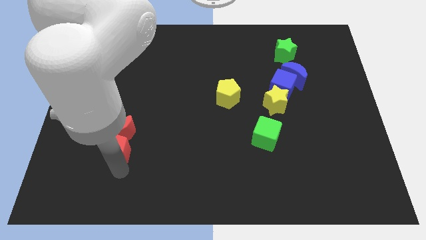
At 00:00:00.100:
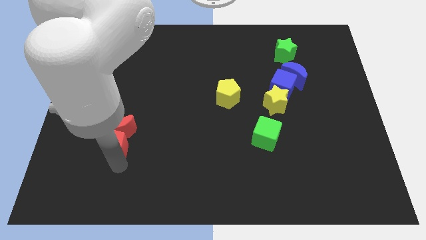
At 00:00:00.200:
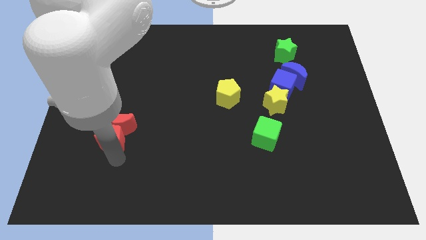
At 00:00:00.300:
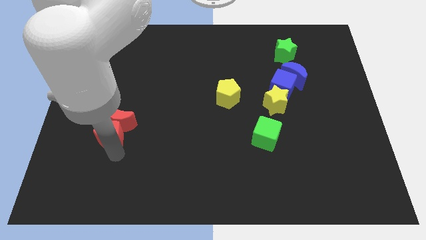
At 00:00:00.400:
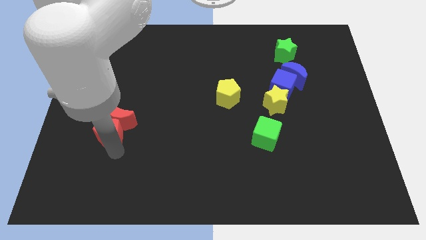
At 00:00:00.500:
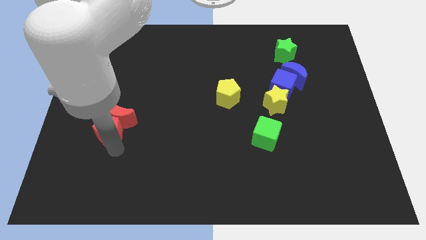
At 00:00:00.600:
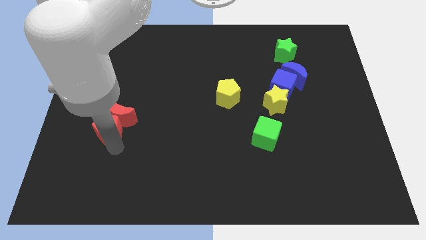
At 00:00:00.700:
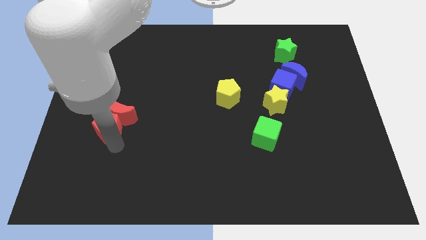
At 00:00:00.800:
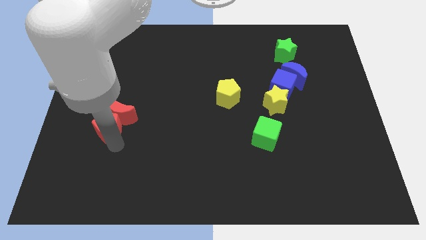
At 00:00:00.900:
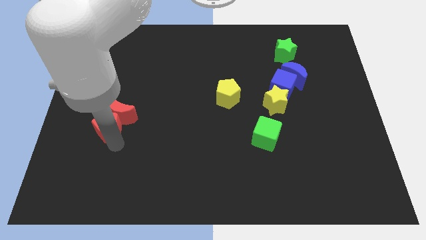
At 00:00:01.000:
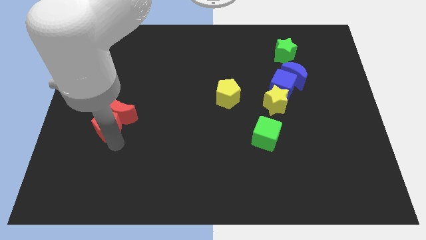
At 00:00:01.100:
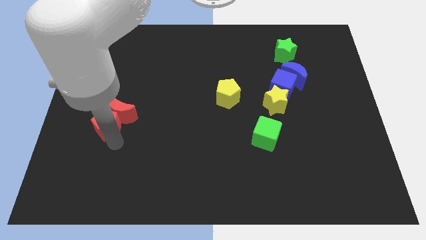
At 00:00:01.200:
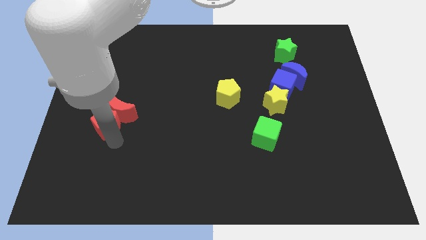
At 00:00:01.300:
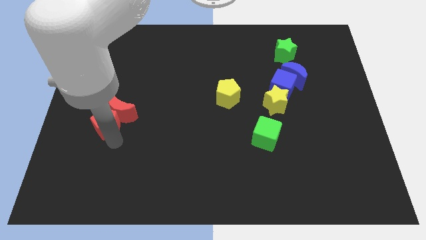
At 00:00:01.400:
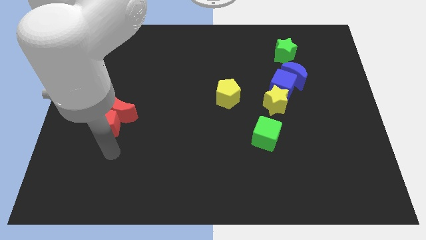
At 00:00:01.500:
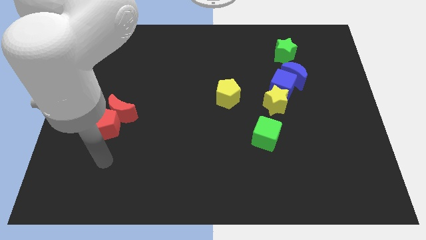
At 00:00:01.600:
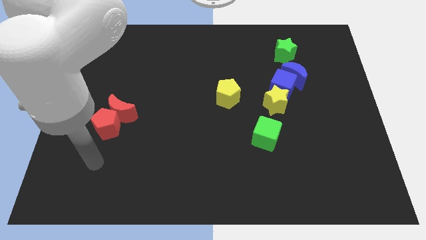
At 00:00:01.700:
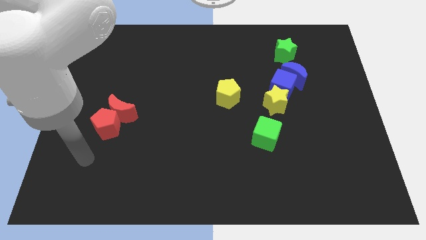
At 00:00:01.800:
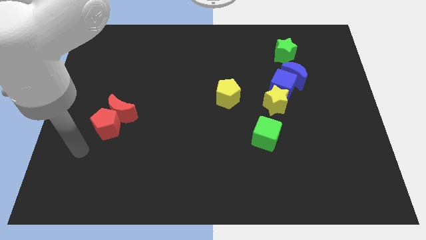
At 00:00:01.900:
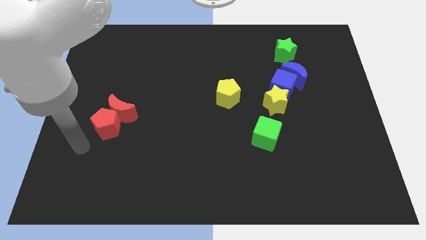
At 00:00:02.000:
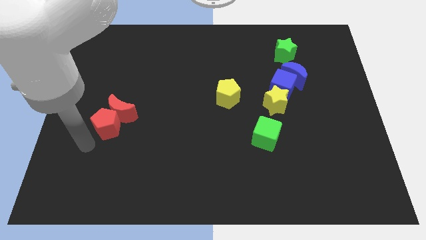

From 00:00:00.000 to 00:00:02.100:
move the red pentagon along with the red moon towards the top side of the board

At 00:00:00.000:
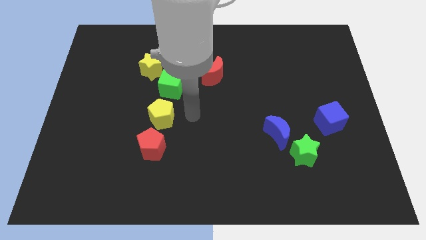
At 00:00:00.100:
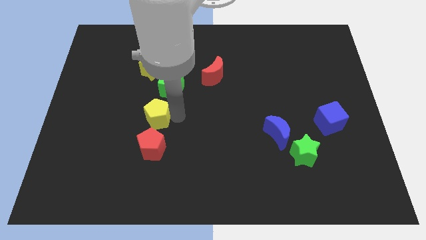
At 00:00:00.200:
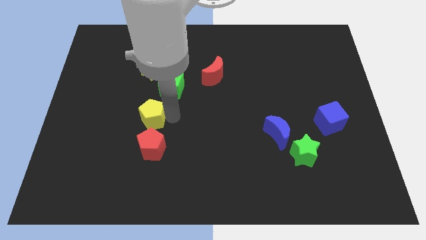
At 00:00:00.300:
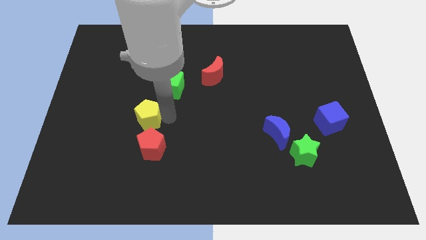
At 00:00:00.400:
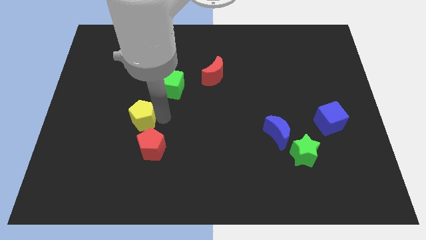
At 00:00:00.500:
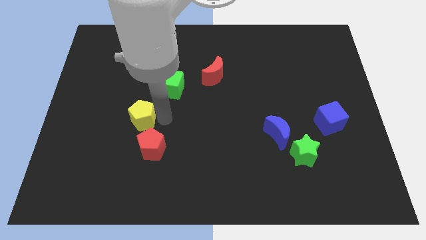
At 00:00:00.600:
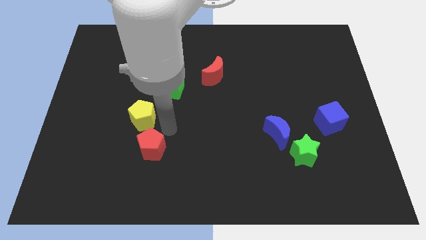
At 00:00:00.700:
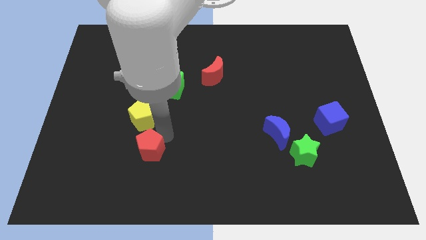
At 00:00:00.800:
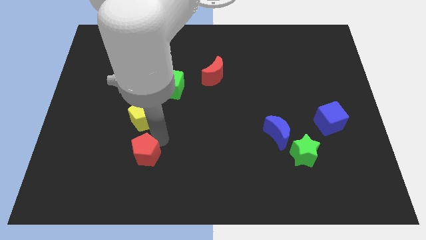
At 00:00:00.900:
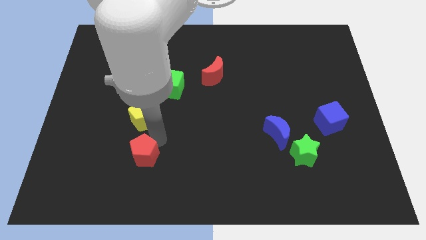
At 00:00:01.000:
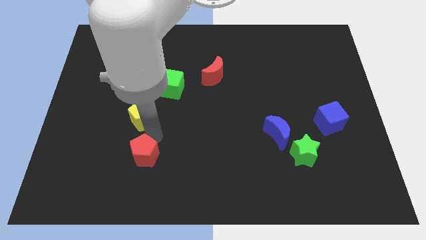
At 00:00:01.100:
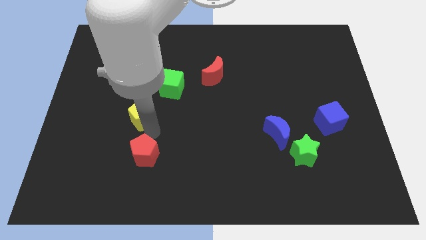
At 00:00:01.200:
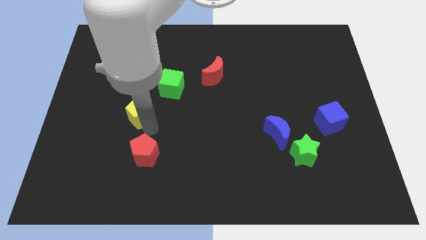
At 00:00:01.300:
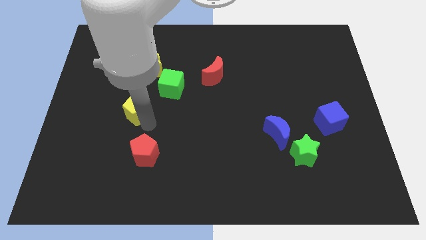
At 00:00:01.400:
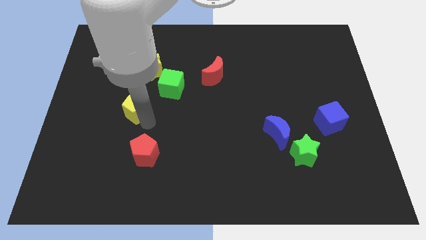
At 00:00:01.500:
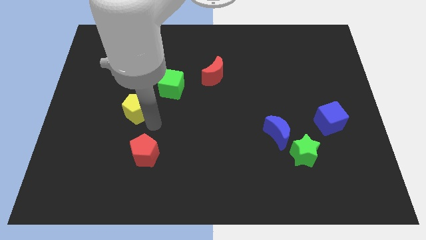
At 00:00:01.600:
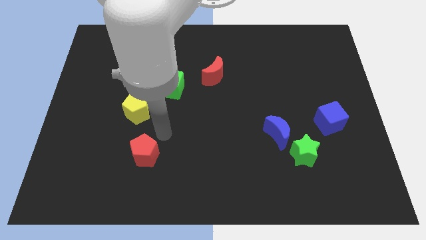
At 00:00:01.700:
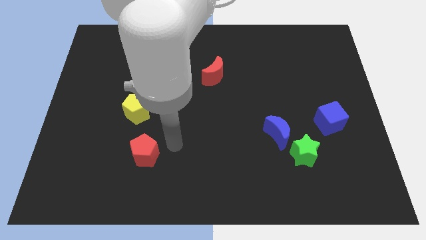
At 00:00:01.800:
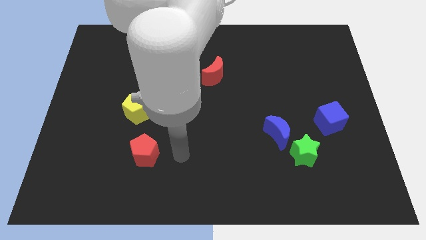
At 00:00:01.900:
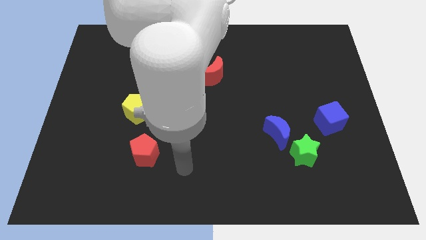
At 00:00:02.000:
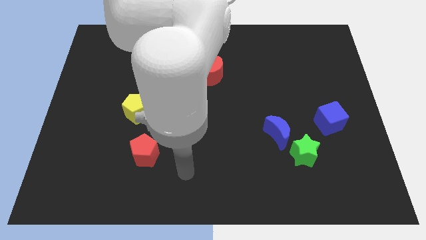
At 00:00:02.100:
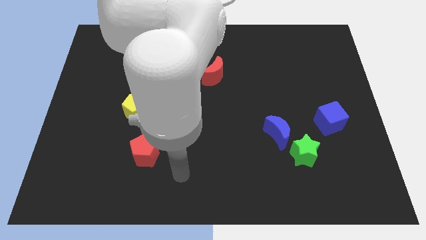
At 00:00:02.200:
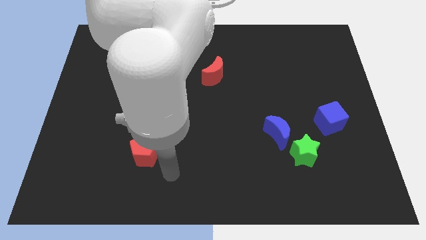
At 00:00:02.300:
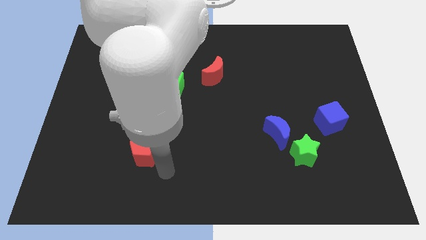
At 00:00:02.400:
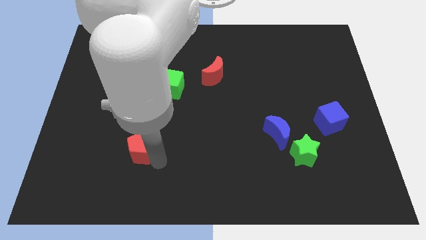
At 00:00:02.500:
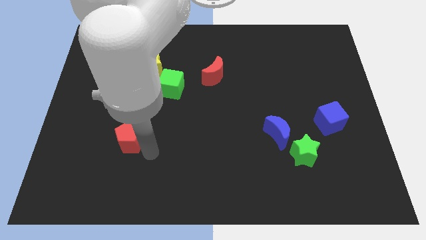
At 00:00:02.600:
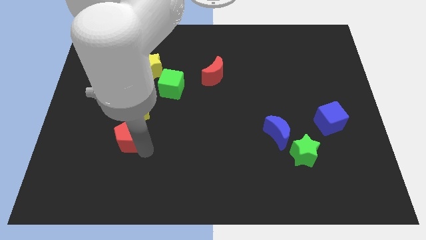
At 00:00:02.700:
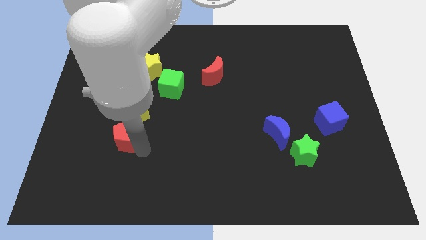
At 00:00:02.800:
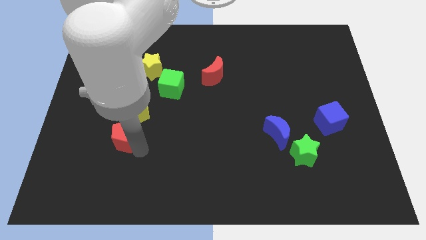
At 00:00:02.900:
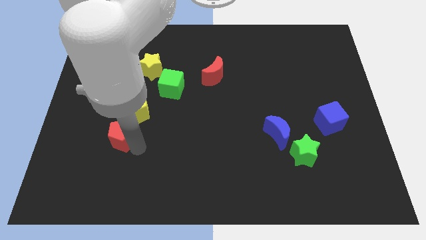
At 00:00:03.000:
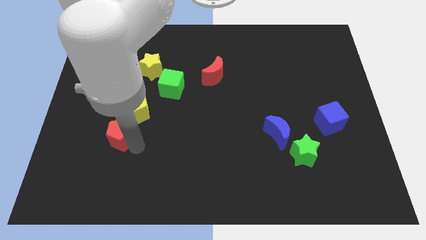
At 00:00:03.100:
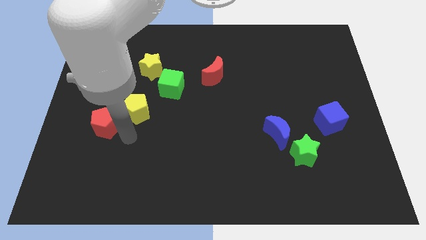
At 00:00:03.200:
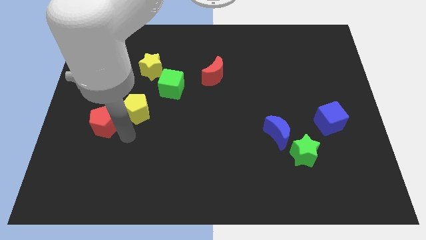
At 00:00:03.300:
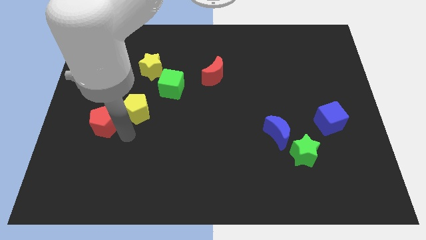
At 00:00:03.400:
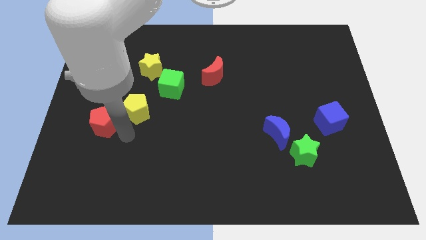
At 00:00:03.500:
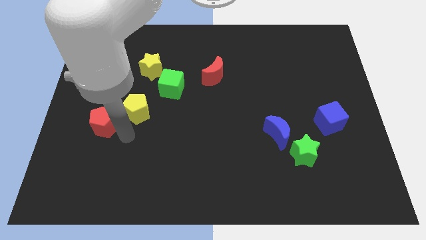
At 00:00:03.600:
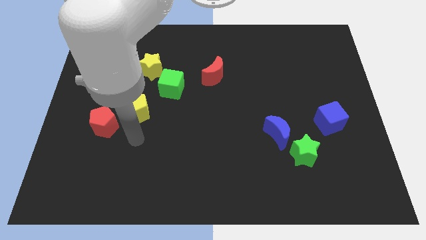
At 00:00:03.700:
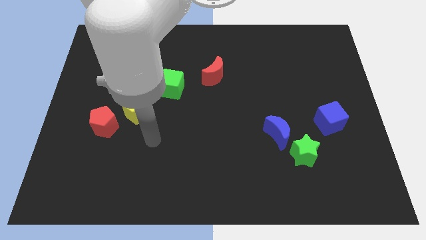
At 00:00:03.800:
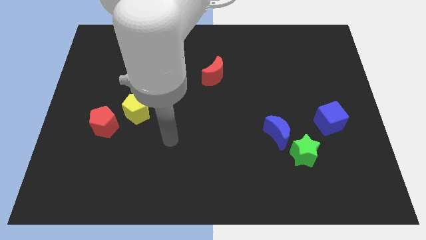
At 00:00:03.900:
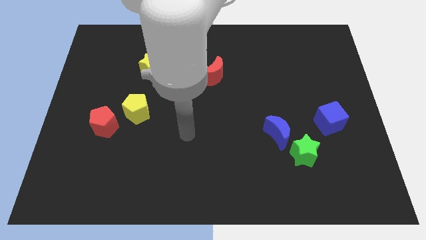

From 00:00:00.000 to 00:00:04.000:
push the red pentagon to the left of yellow pentagon

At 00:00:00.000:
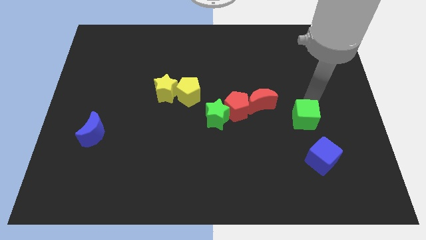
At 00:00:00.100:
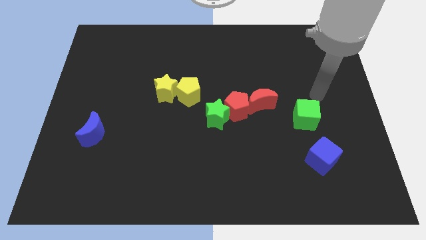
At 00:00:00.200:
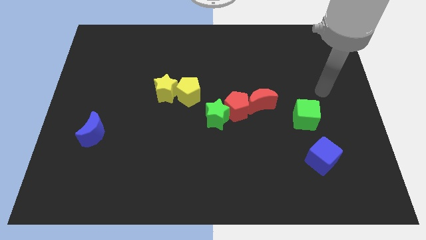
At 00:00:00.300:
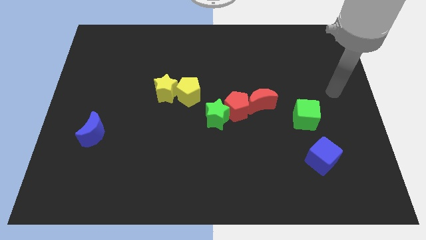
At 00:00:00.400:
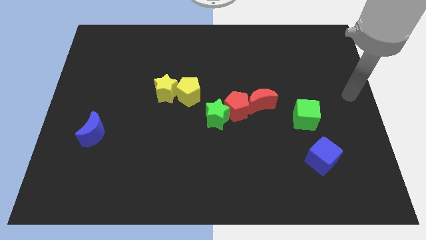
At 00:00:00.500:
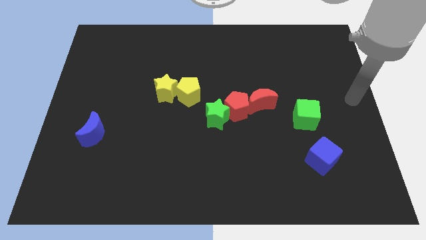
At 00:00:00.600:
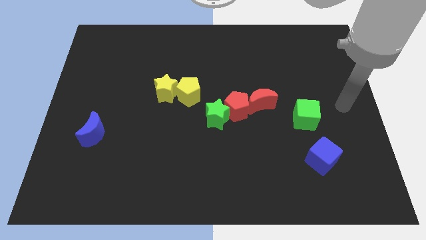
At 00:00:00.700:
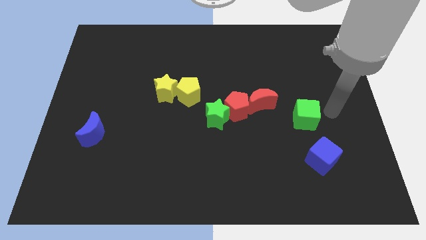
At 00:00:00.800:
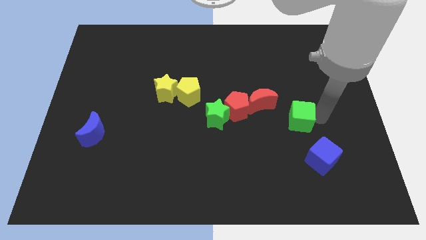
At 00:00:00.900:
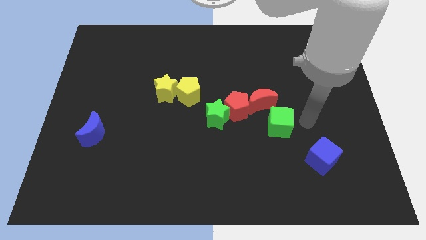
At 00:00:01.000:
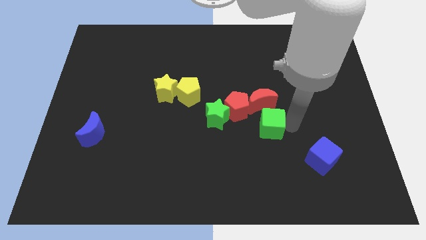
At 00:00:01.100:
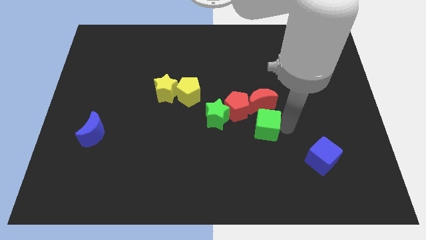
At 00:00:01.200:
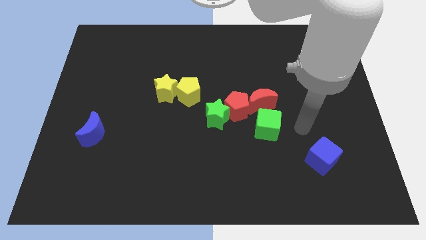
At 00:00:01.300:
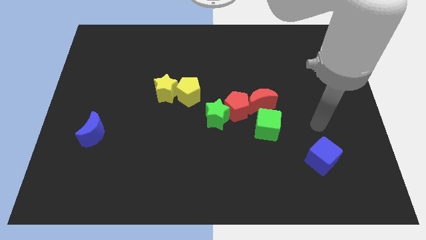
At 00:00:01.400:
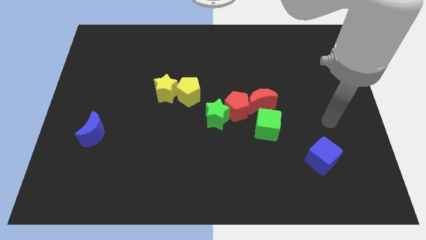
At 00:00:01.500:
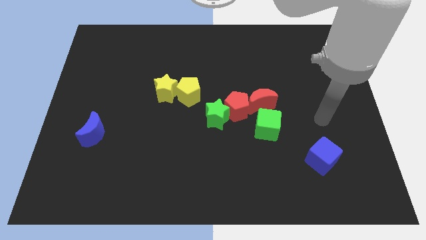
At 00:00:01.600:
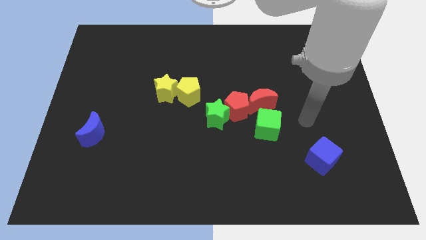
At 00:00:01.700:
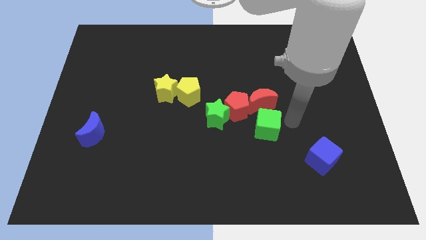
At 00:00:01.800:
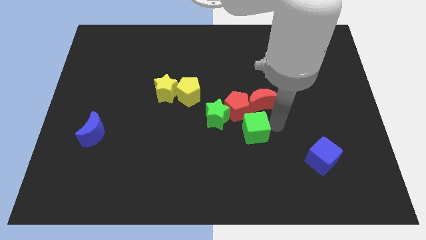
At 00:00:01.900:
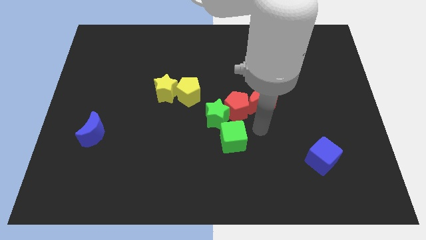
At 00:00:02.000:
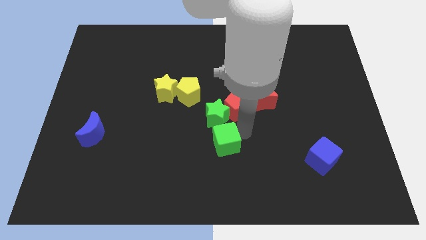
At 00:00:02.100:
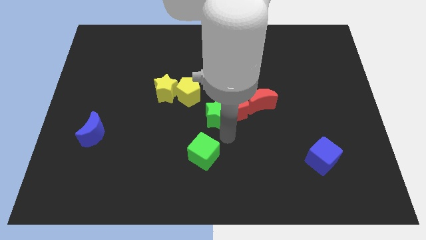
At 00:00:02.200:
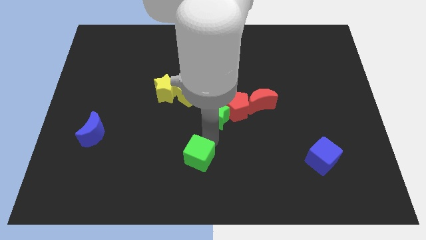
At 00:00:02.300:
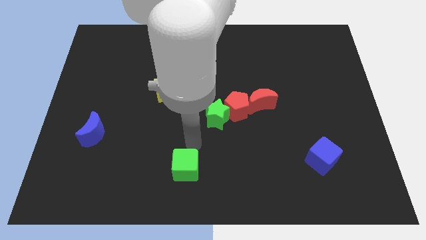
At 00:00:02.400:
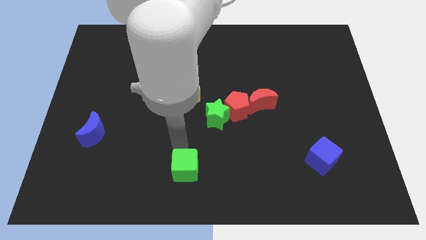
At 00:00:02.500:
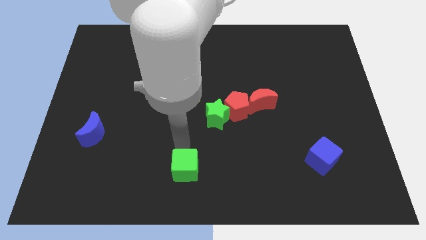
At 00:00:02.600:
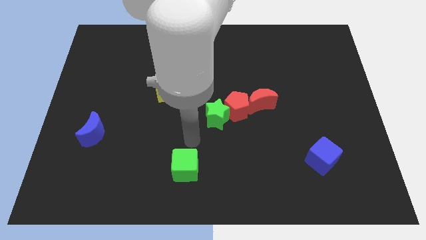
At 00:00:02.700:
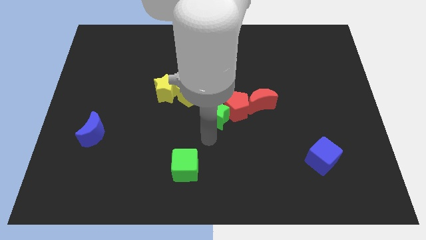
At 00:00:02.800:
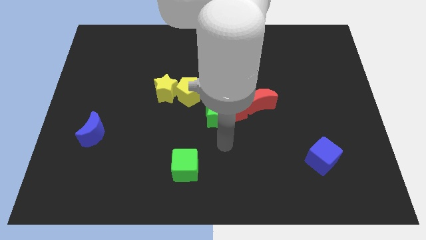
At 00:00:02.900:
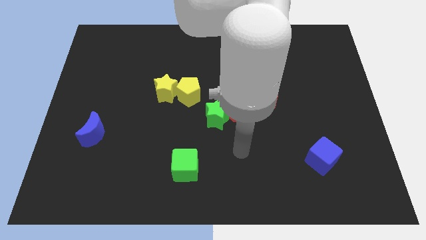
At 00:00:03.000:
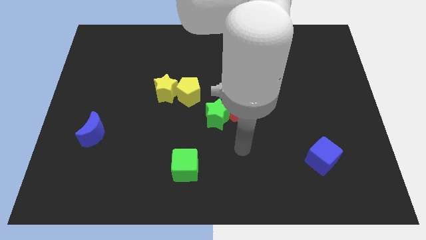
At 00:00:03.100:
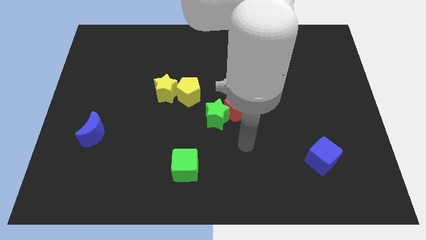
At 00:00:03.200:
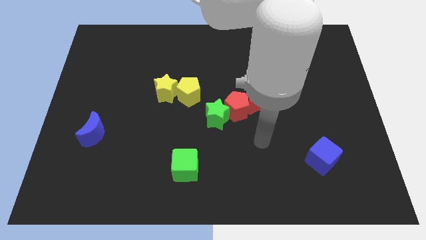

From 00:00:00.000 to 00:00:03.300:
move the green cube vertically to the bottom side of the yellow pentagon
